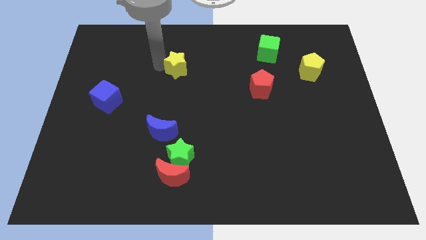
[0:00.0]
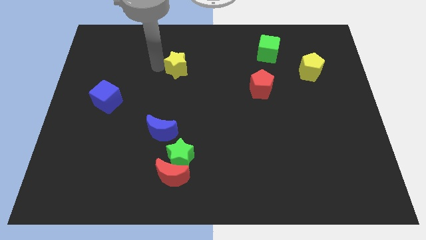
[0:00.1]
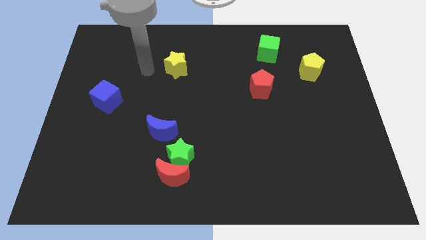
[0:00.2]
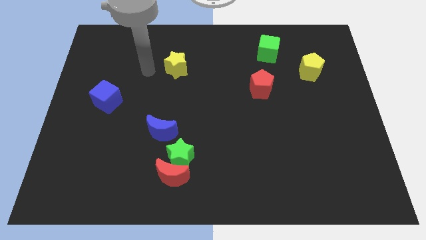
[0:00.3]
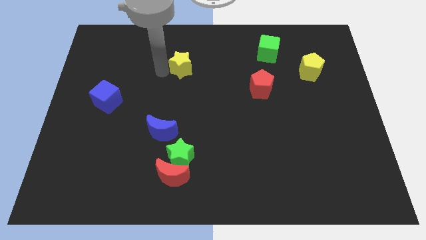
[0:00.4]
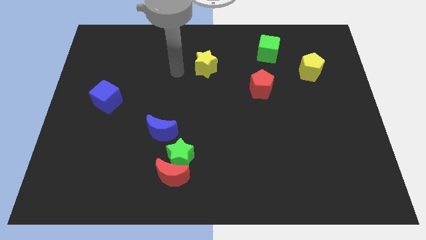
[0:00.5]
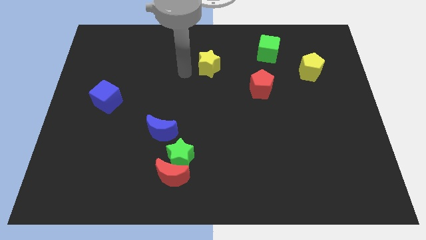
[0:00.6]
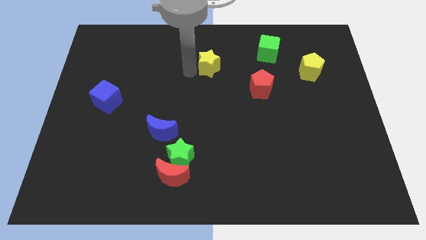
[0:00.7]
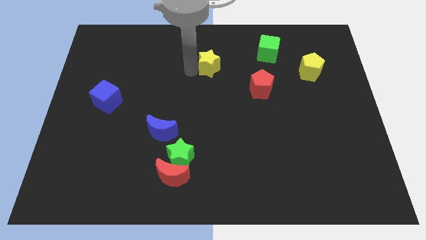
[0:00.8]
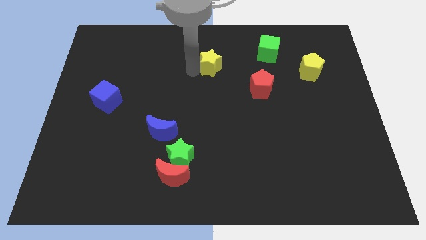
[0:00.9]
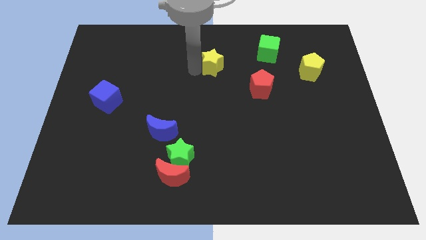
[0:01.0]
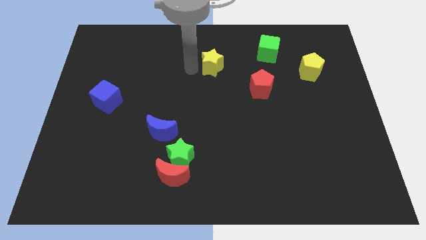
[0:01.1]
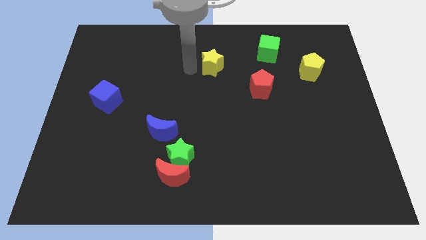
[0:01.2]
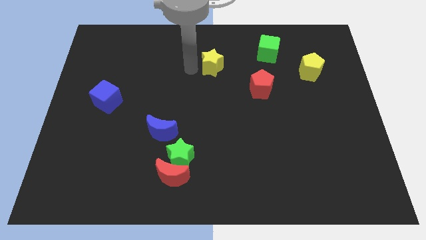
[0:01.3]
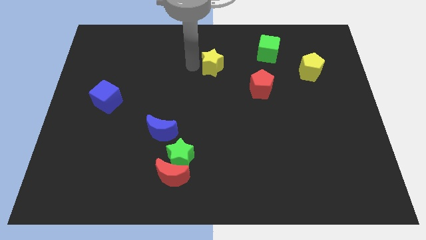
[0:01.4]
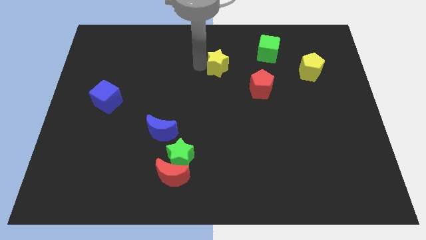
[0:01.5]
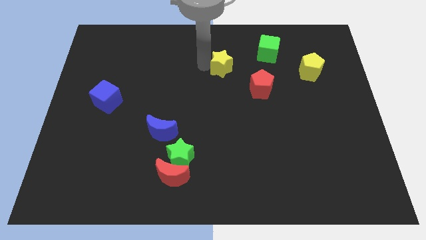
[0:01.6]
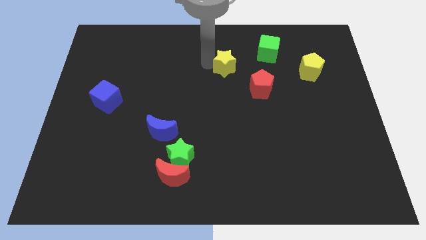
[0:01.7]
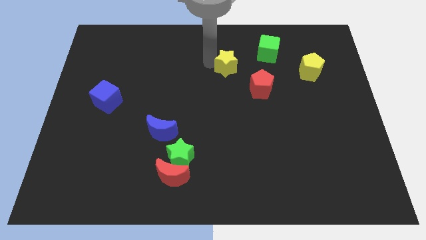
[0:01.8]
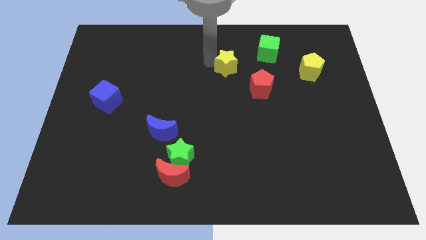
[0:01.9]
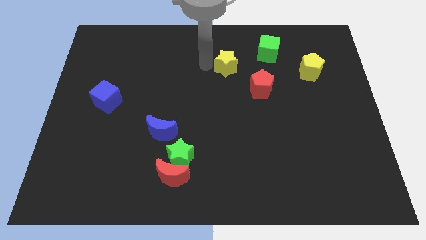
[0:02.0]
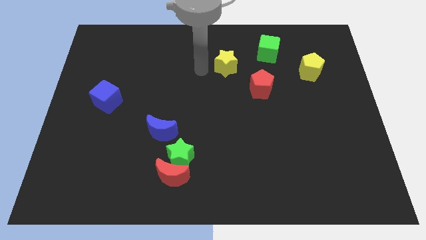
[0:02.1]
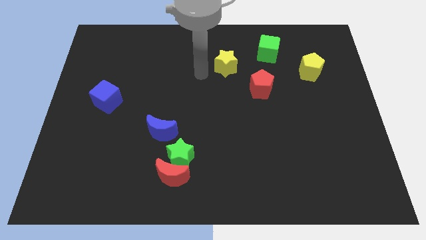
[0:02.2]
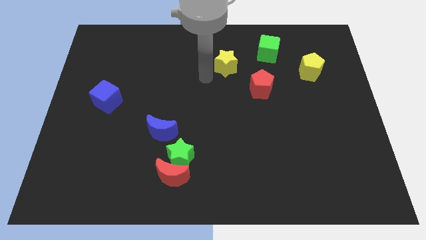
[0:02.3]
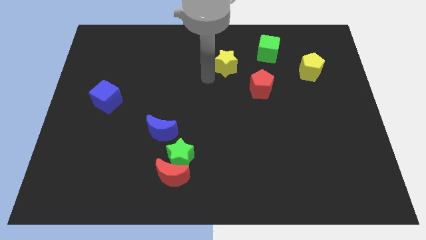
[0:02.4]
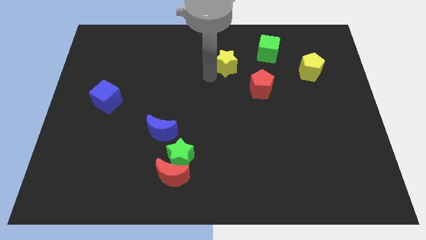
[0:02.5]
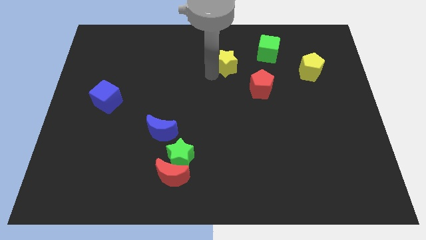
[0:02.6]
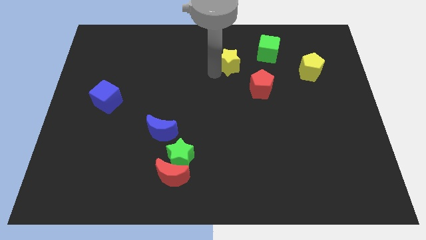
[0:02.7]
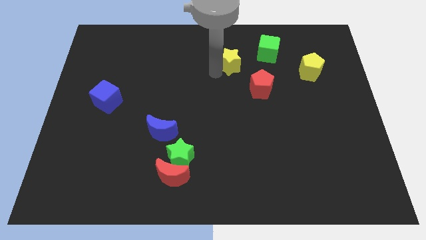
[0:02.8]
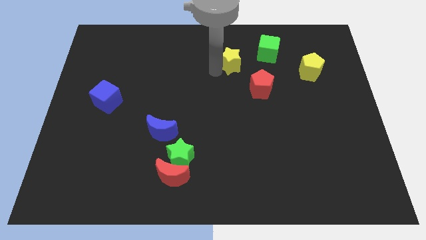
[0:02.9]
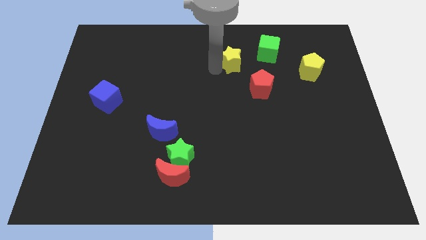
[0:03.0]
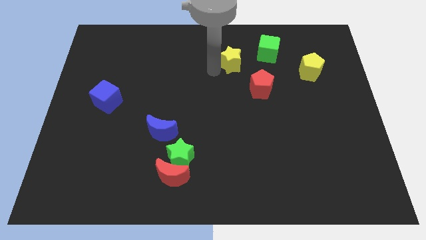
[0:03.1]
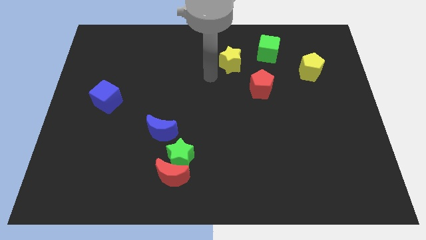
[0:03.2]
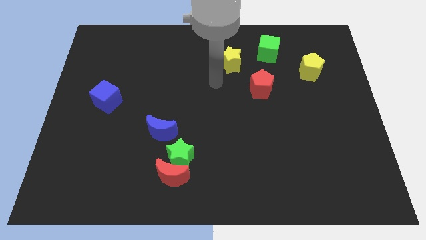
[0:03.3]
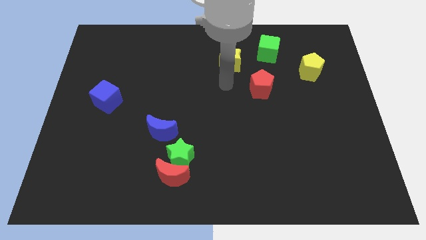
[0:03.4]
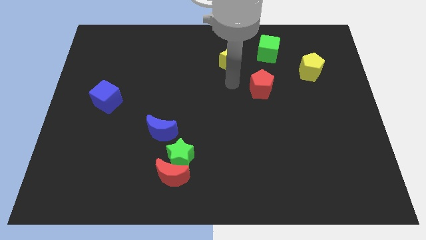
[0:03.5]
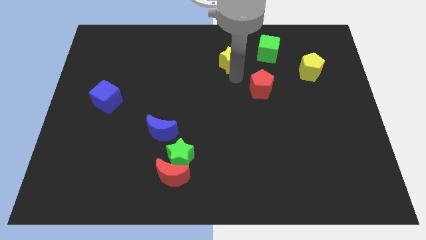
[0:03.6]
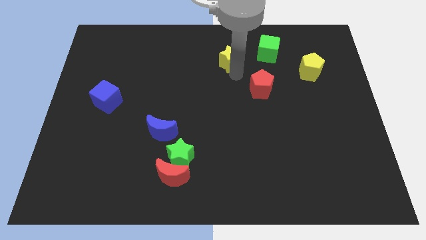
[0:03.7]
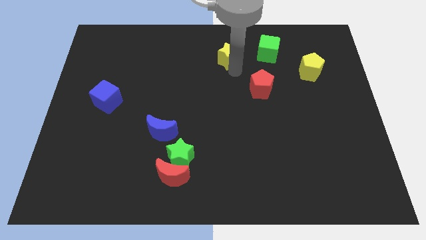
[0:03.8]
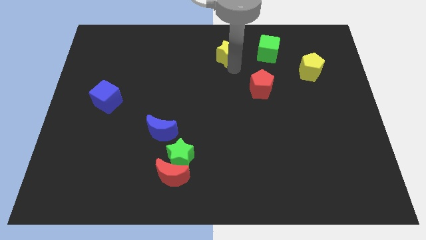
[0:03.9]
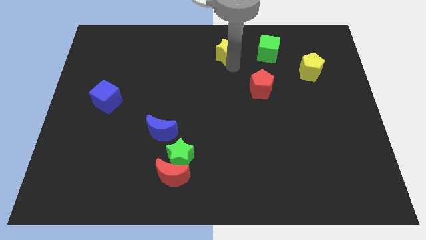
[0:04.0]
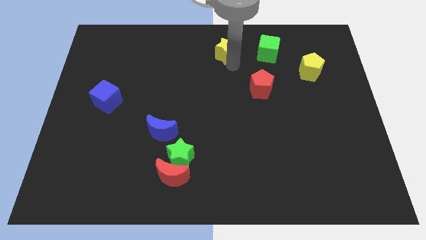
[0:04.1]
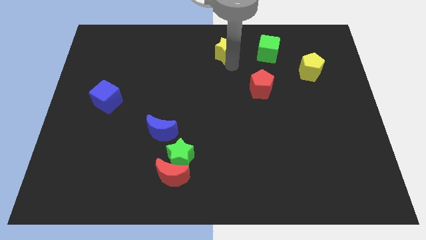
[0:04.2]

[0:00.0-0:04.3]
move the yellow star to the left of the green cube

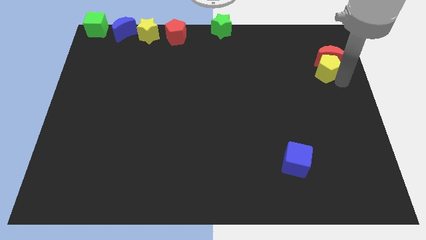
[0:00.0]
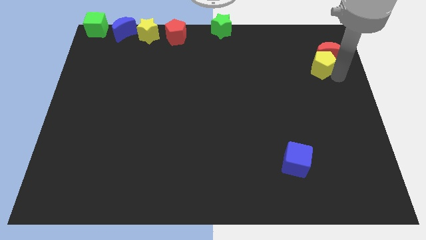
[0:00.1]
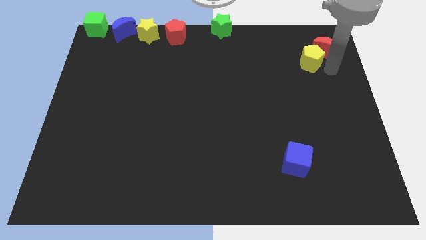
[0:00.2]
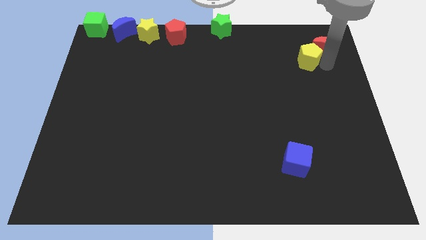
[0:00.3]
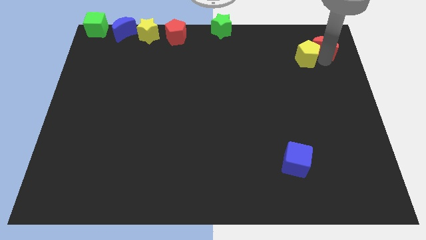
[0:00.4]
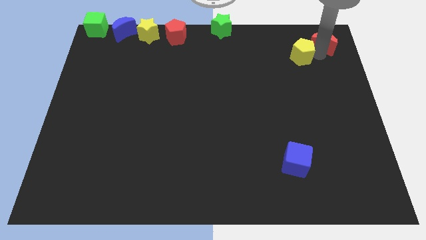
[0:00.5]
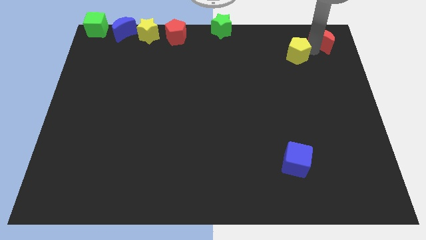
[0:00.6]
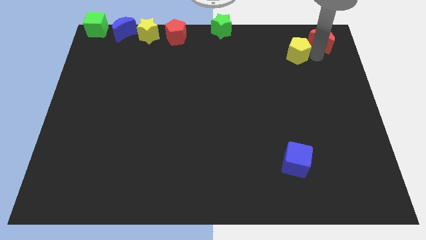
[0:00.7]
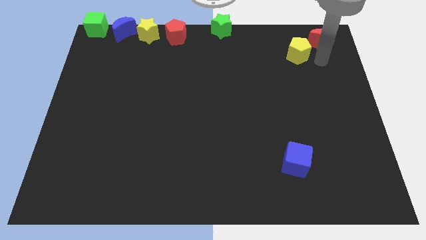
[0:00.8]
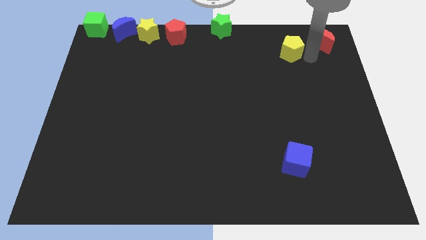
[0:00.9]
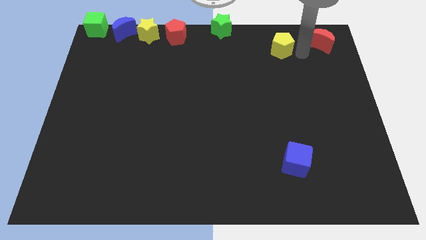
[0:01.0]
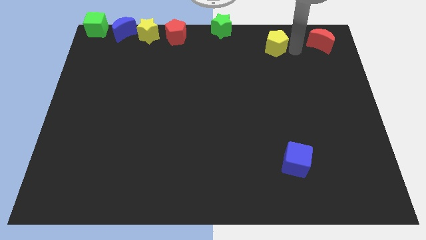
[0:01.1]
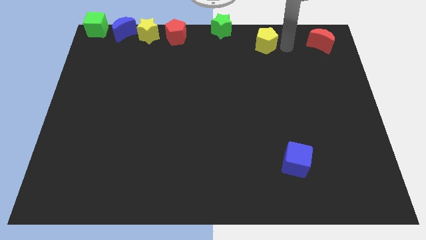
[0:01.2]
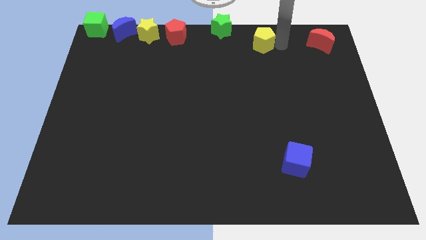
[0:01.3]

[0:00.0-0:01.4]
slide the yellow pentagon parallel left to the red moon

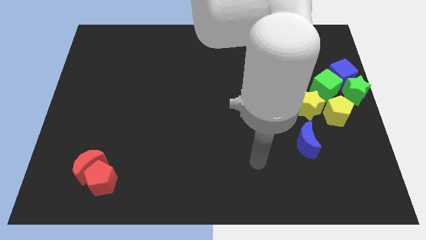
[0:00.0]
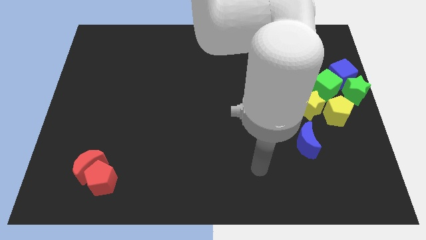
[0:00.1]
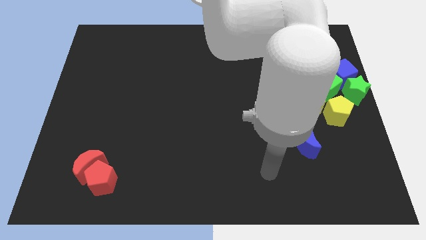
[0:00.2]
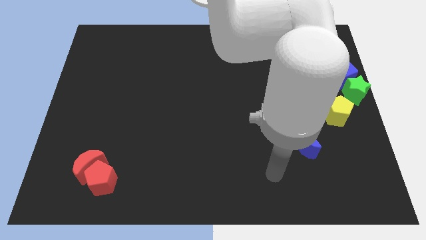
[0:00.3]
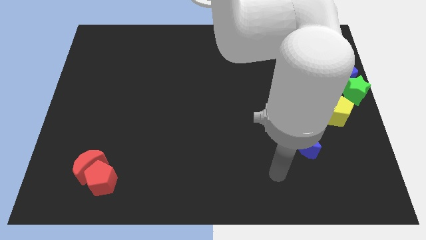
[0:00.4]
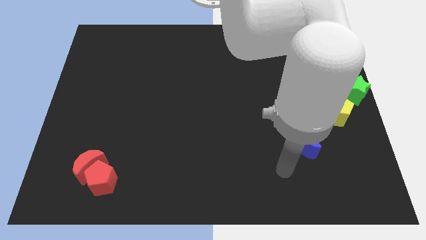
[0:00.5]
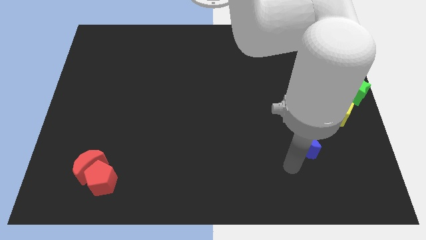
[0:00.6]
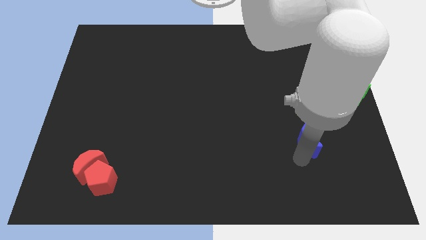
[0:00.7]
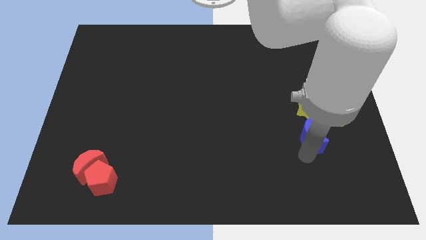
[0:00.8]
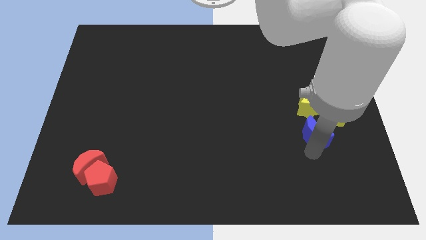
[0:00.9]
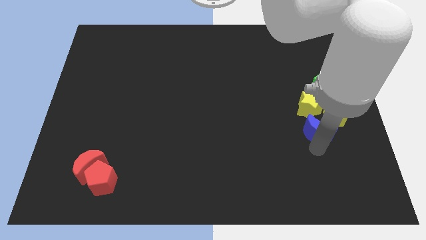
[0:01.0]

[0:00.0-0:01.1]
push the blue moon towards the yellow blocks

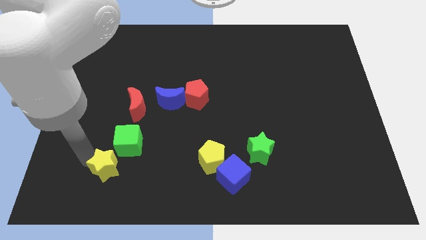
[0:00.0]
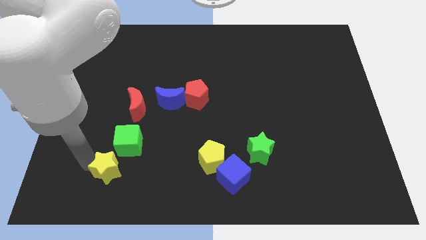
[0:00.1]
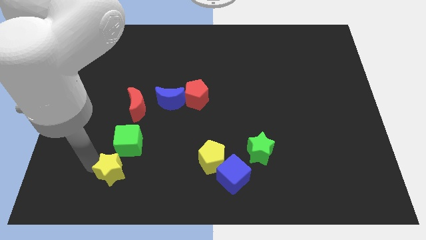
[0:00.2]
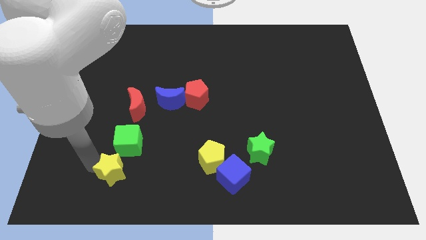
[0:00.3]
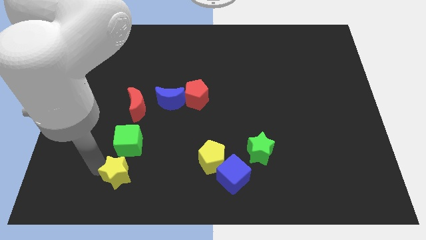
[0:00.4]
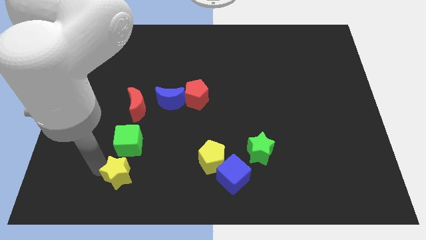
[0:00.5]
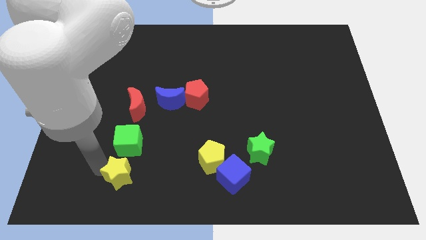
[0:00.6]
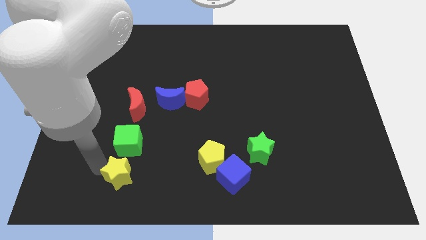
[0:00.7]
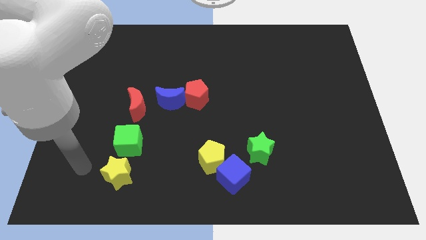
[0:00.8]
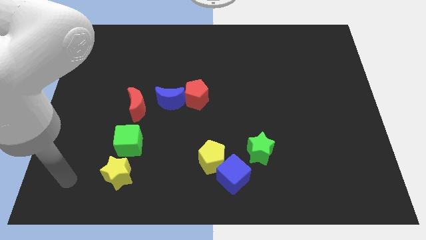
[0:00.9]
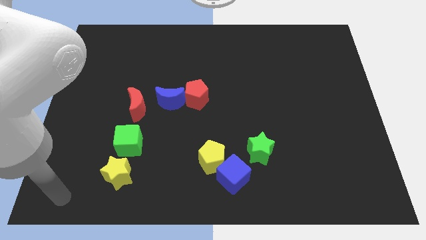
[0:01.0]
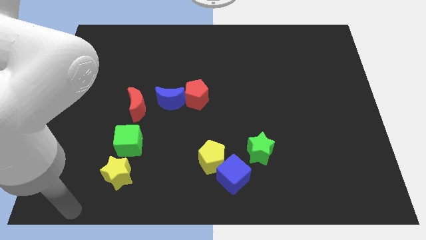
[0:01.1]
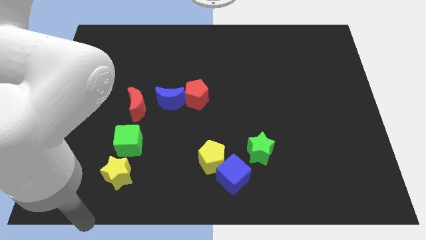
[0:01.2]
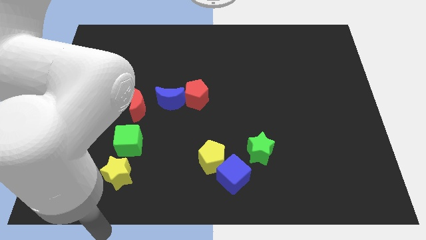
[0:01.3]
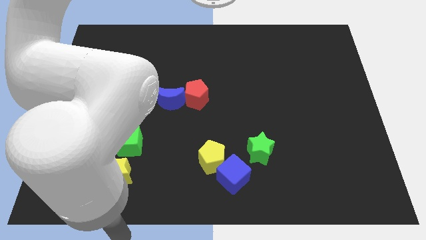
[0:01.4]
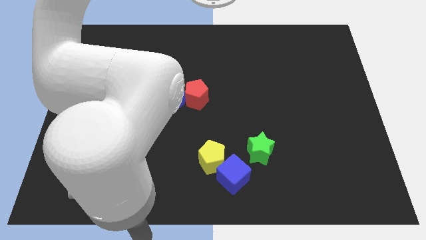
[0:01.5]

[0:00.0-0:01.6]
move the yellow star slightly to the bottom

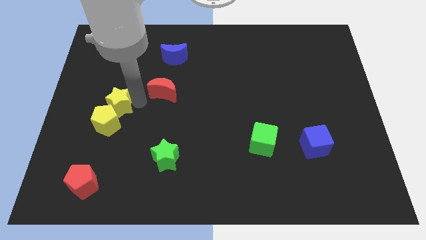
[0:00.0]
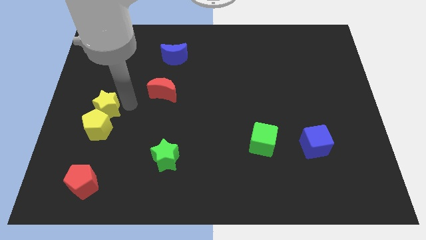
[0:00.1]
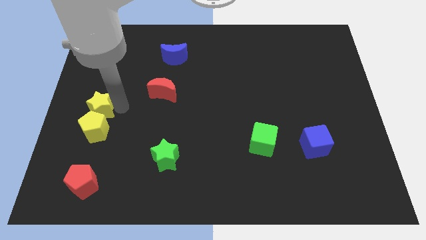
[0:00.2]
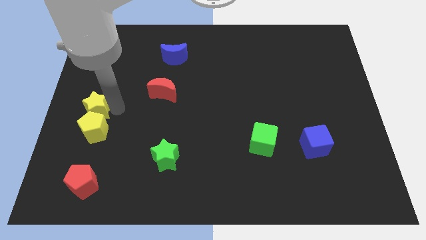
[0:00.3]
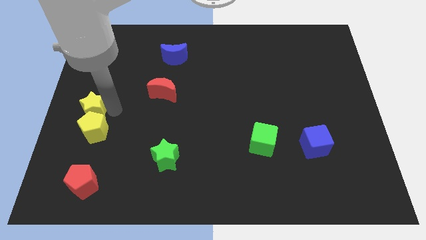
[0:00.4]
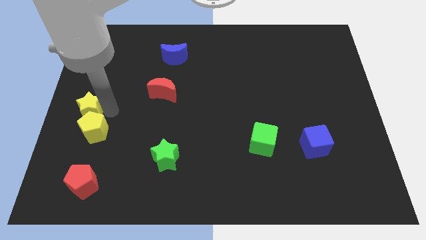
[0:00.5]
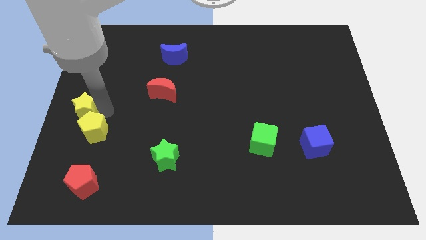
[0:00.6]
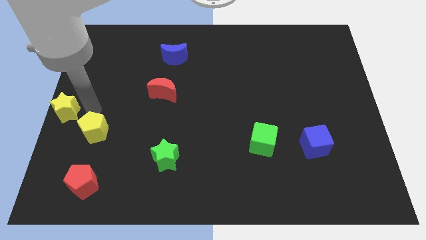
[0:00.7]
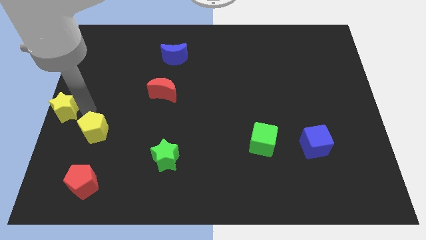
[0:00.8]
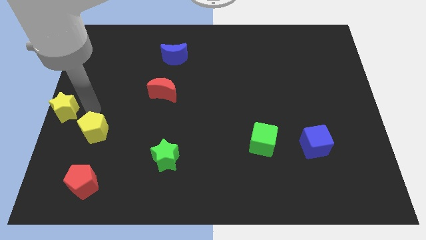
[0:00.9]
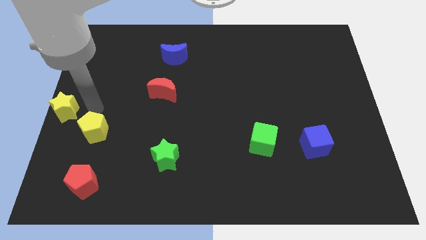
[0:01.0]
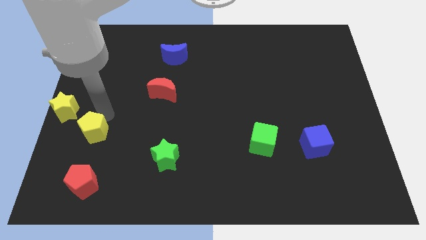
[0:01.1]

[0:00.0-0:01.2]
move the yellow star to the left middle of the board
